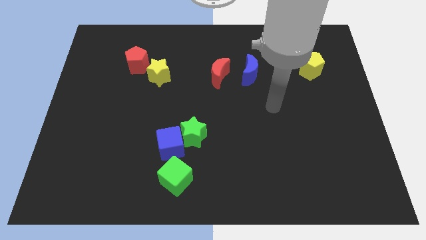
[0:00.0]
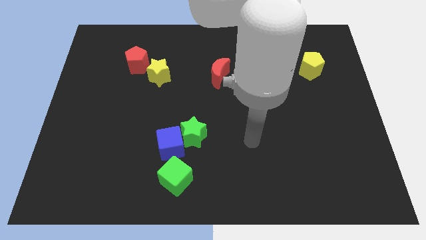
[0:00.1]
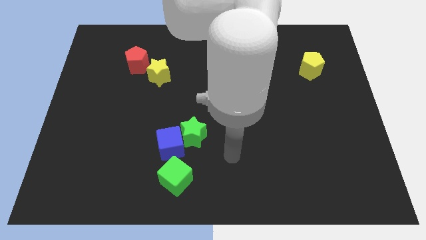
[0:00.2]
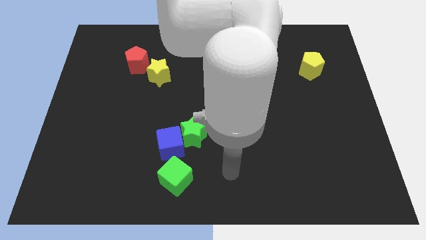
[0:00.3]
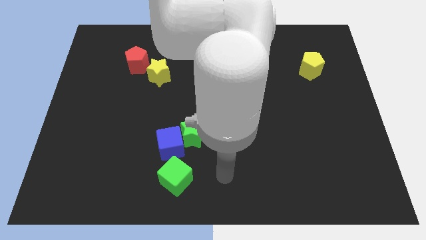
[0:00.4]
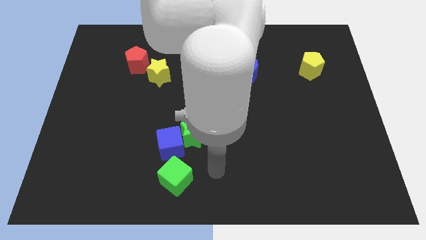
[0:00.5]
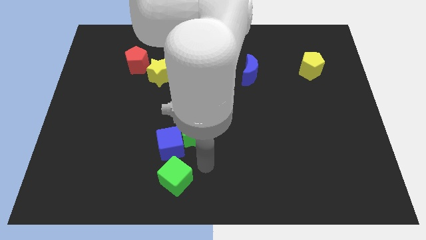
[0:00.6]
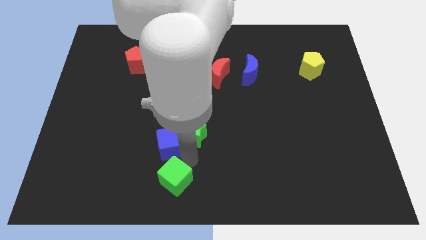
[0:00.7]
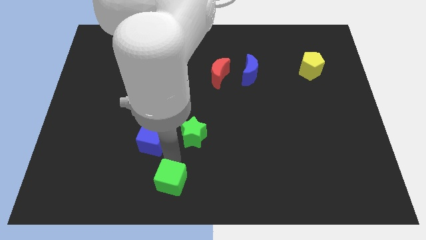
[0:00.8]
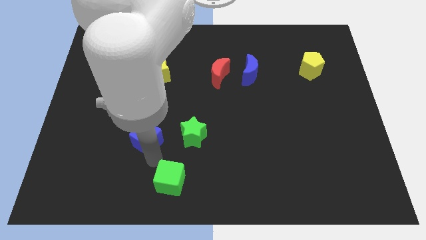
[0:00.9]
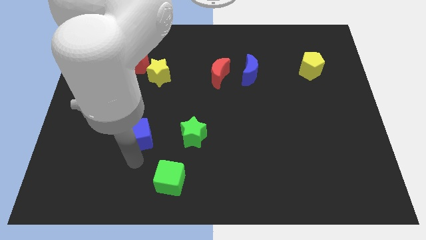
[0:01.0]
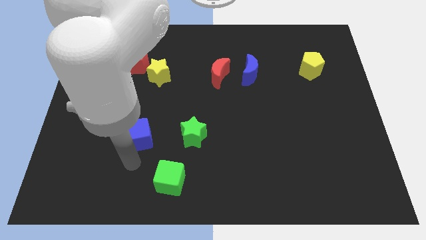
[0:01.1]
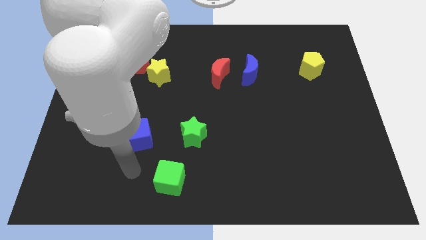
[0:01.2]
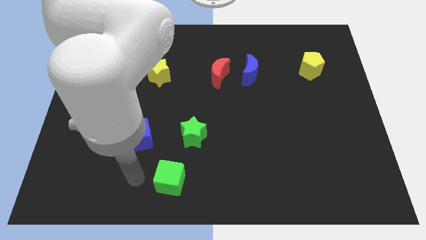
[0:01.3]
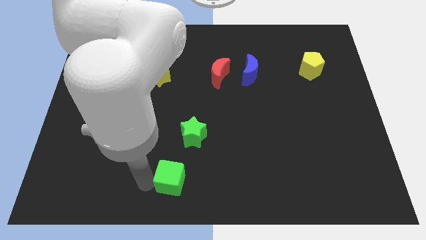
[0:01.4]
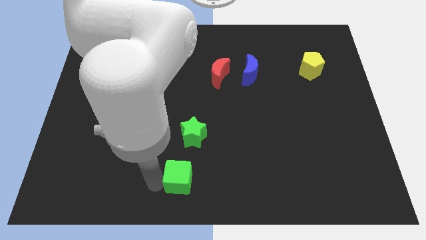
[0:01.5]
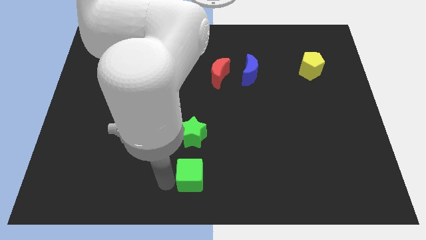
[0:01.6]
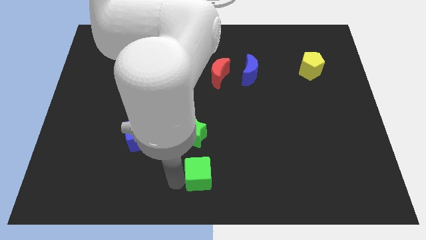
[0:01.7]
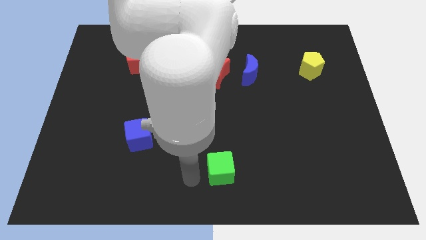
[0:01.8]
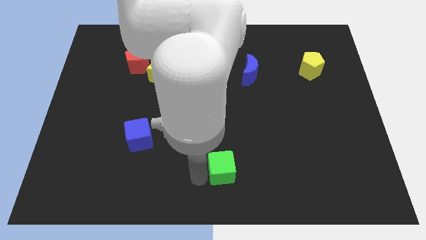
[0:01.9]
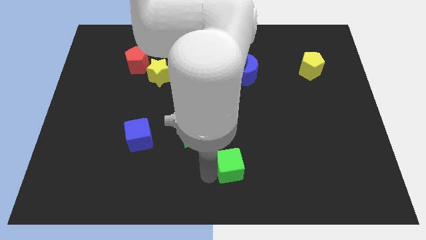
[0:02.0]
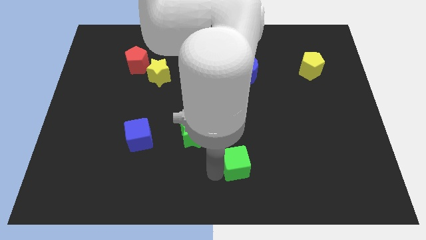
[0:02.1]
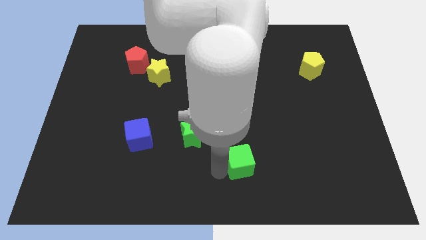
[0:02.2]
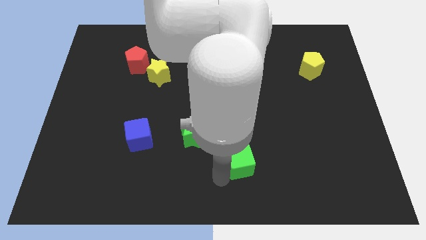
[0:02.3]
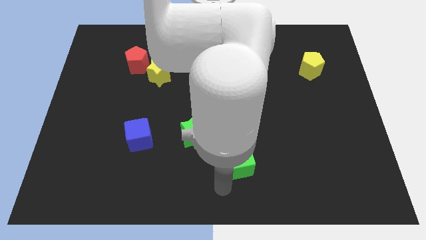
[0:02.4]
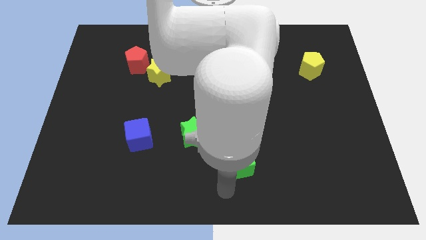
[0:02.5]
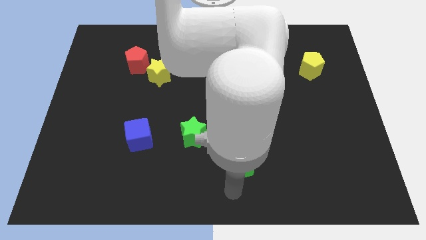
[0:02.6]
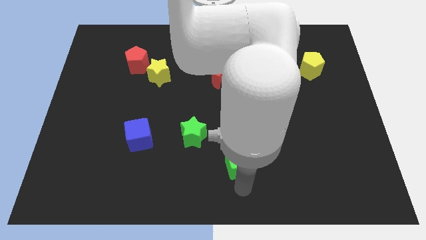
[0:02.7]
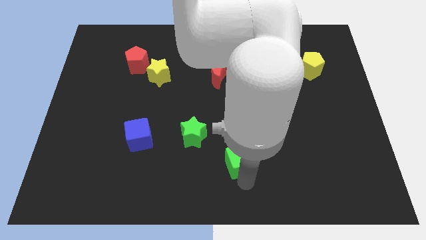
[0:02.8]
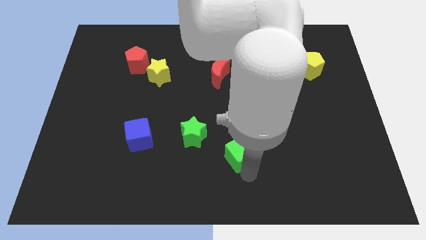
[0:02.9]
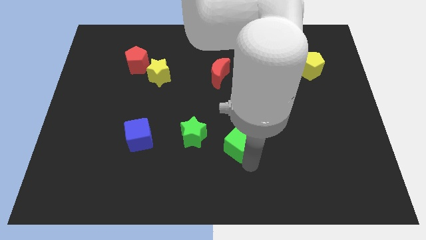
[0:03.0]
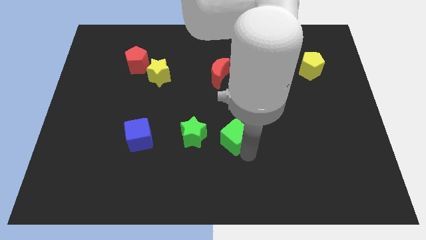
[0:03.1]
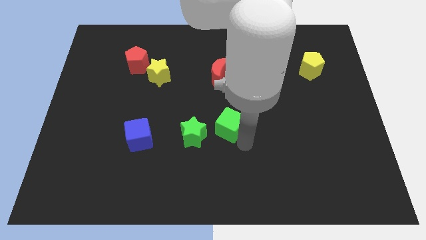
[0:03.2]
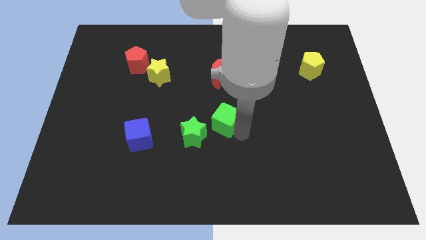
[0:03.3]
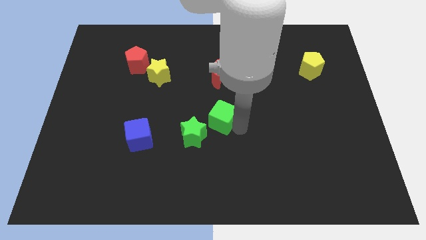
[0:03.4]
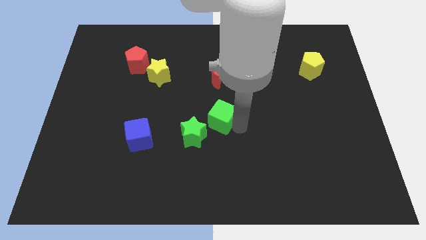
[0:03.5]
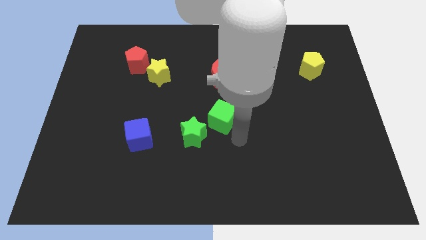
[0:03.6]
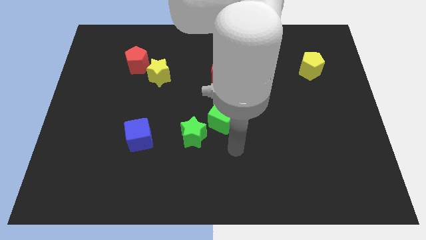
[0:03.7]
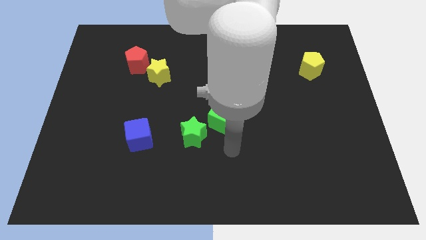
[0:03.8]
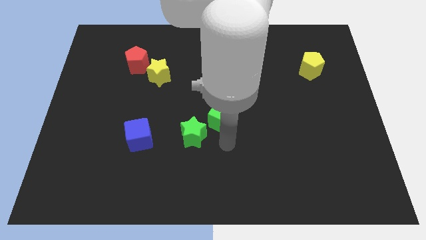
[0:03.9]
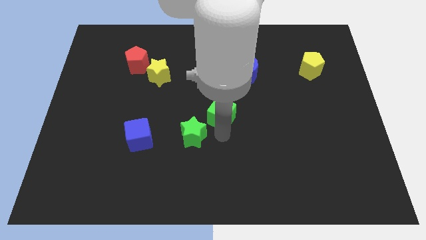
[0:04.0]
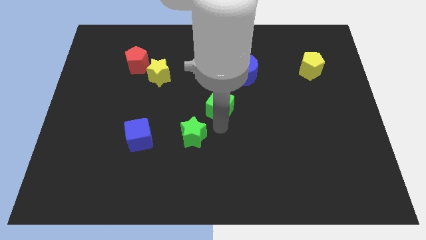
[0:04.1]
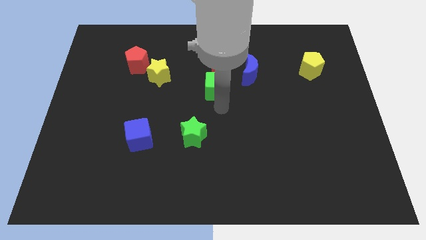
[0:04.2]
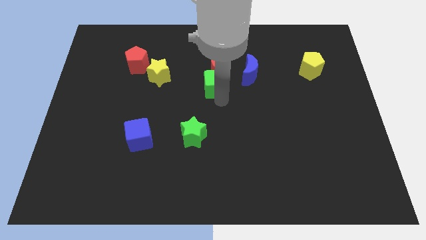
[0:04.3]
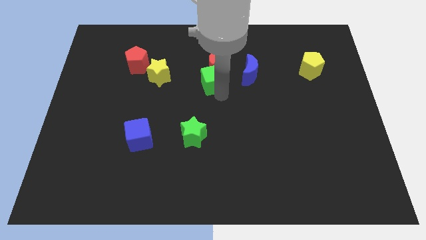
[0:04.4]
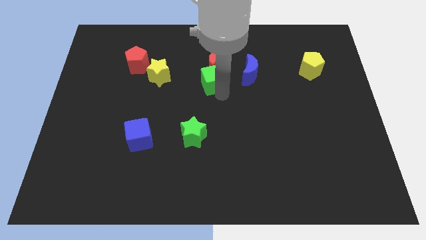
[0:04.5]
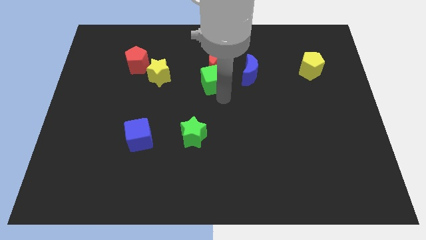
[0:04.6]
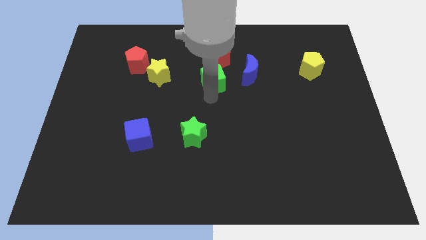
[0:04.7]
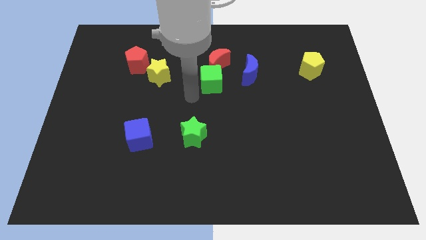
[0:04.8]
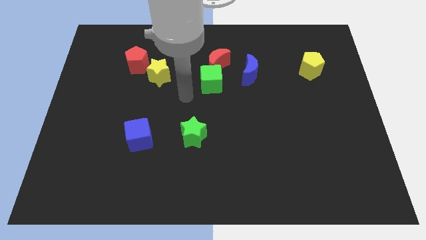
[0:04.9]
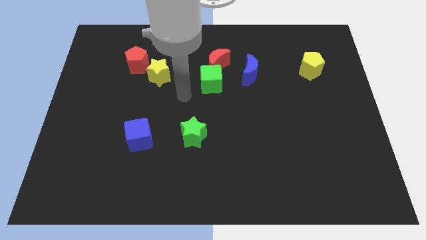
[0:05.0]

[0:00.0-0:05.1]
push the green cube close to the red moon

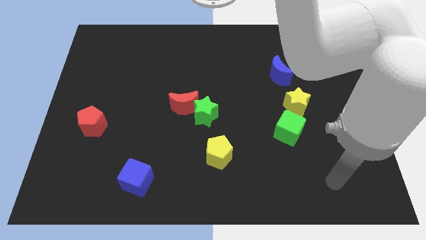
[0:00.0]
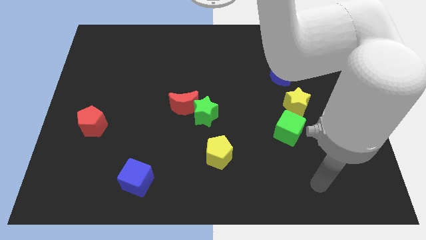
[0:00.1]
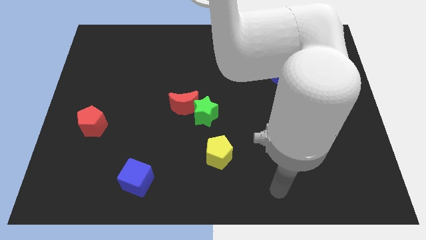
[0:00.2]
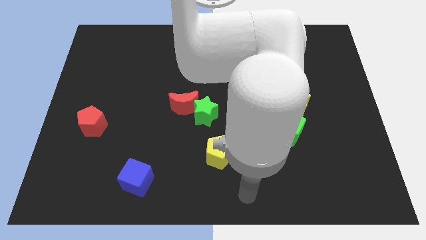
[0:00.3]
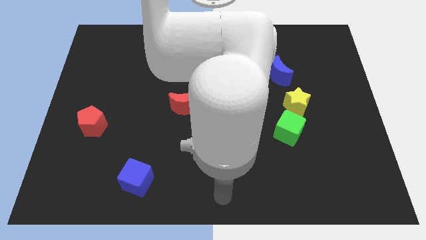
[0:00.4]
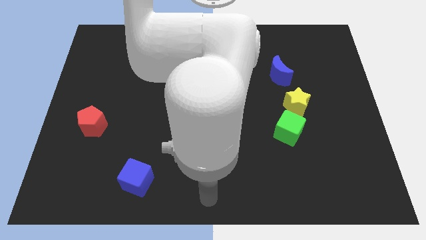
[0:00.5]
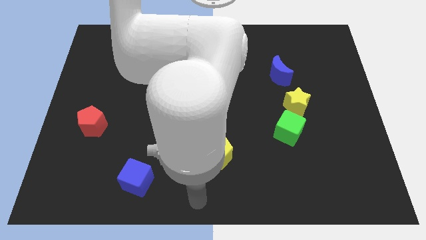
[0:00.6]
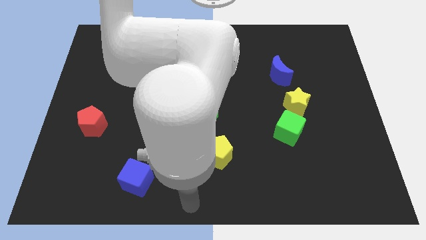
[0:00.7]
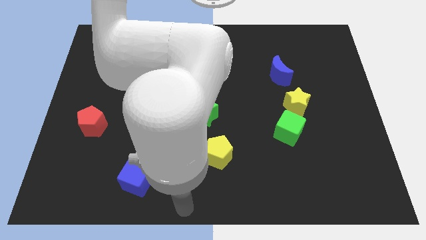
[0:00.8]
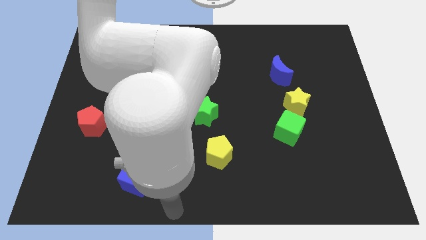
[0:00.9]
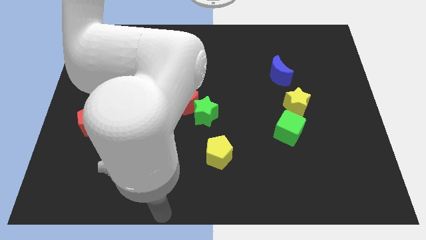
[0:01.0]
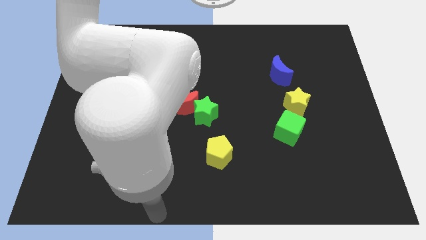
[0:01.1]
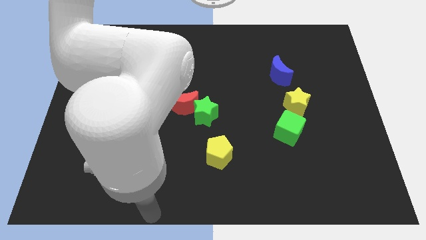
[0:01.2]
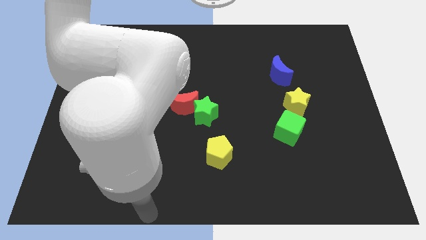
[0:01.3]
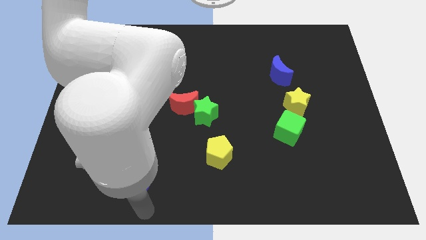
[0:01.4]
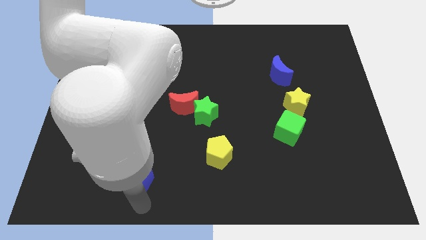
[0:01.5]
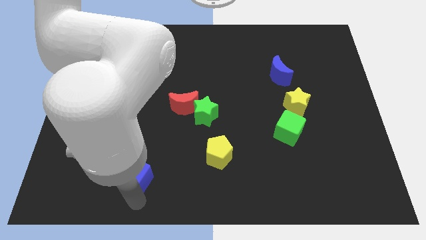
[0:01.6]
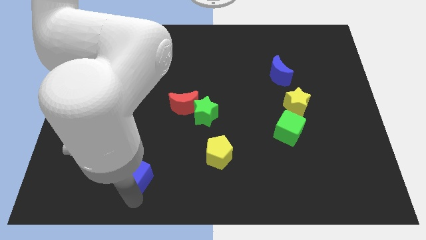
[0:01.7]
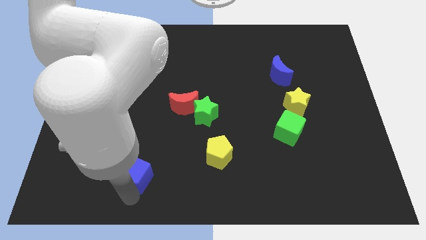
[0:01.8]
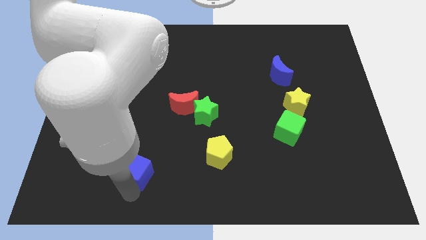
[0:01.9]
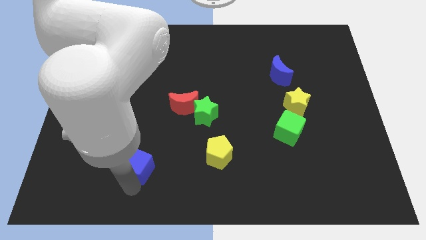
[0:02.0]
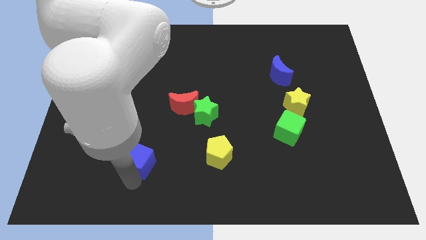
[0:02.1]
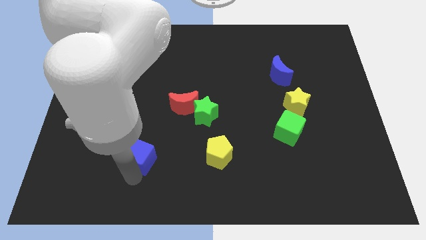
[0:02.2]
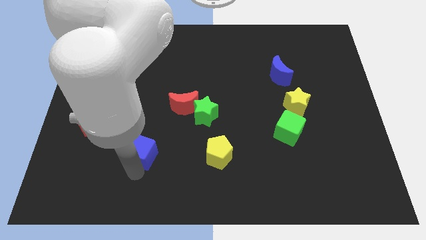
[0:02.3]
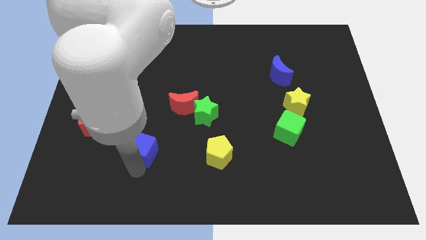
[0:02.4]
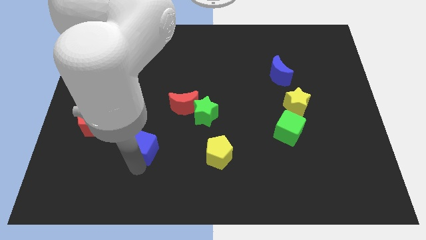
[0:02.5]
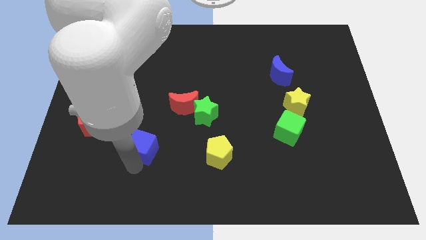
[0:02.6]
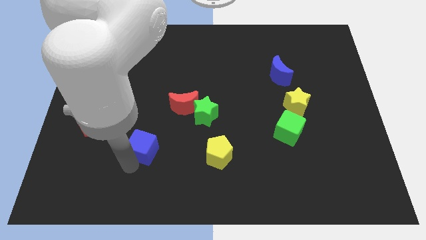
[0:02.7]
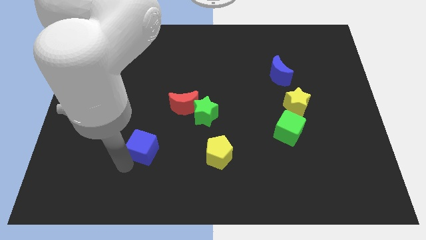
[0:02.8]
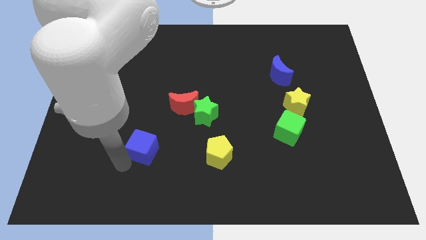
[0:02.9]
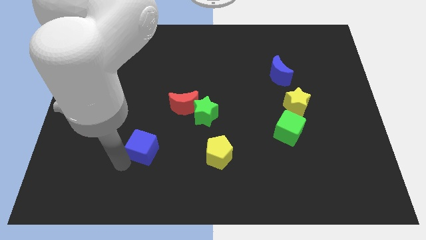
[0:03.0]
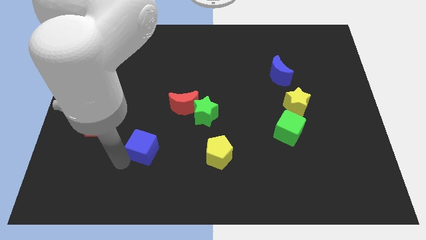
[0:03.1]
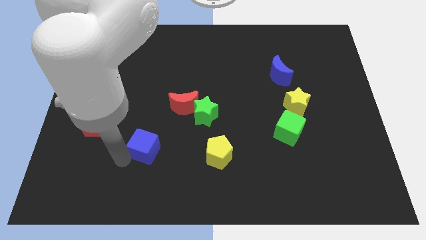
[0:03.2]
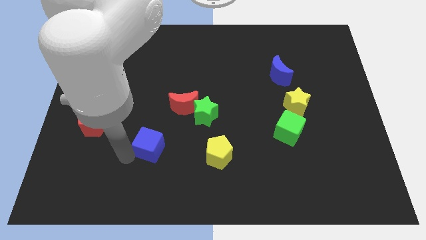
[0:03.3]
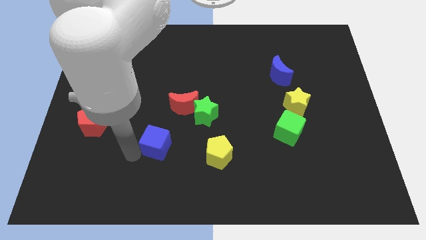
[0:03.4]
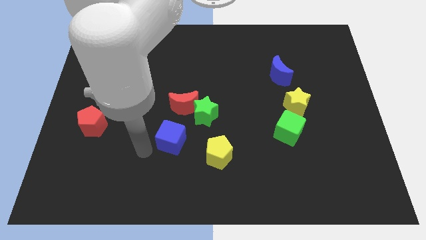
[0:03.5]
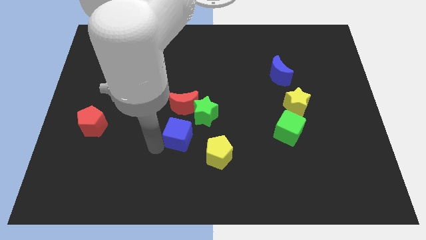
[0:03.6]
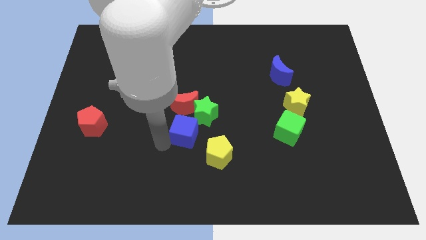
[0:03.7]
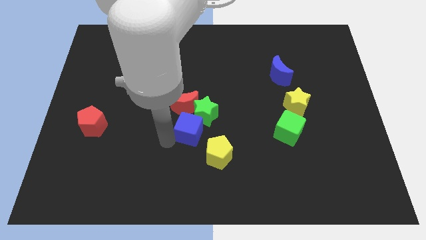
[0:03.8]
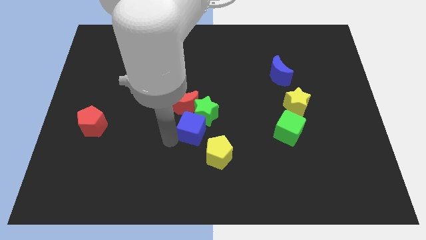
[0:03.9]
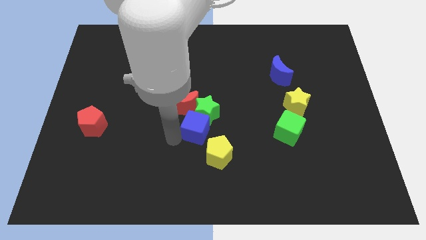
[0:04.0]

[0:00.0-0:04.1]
push the blue cube next to the green star
